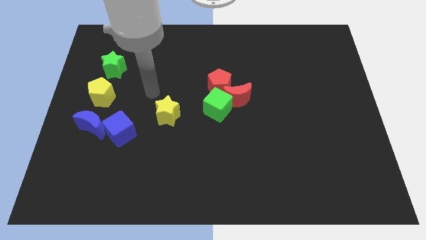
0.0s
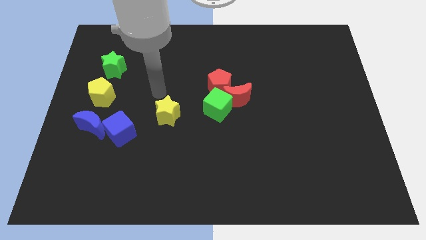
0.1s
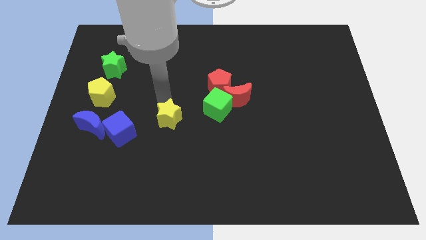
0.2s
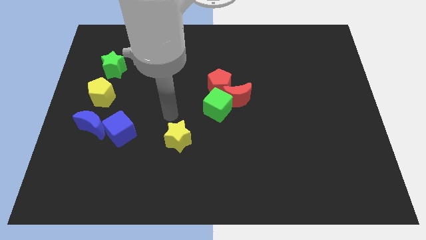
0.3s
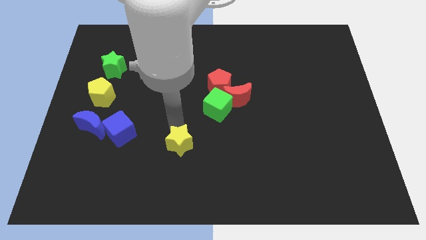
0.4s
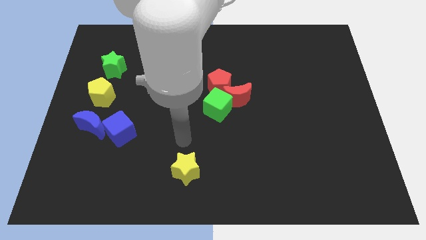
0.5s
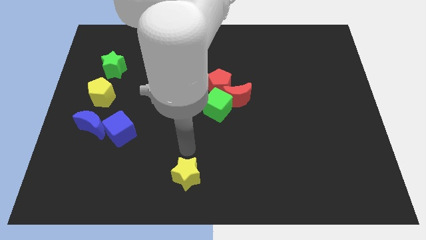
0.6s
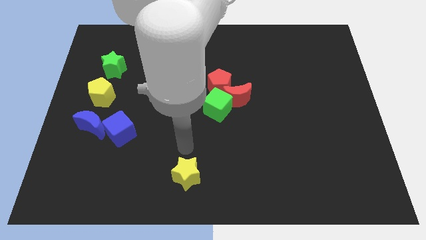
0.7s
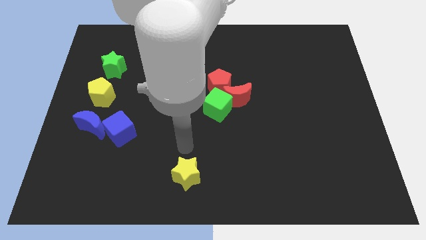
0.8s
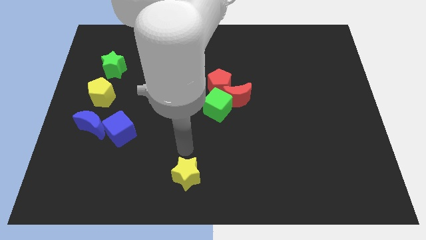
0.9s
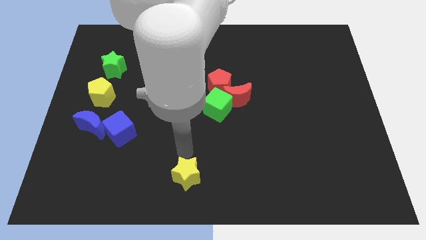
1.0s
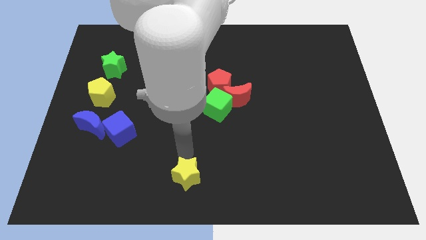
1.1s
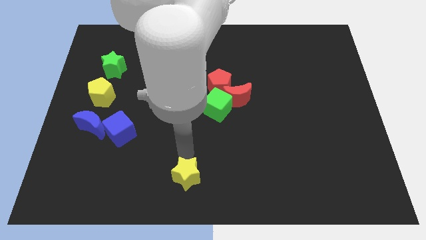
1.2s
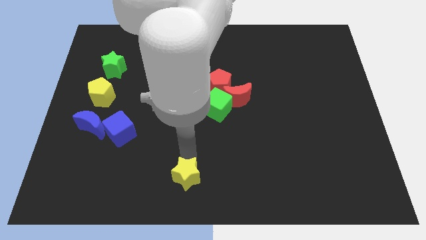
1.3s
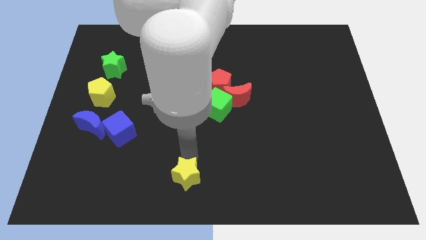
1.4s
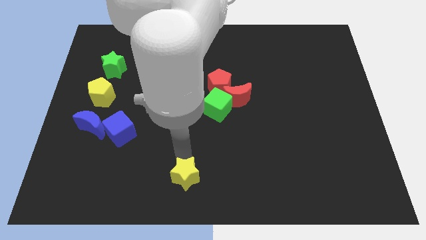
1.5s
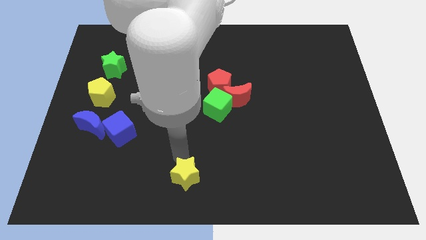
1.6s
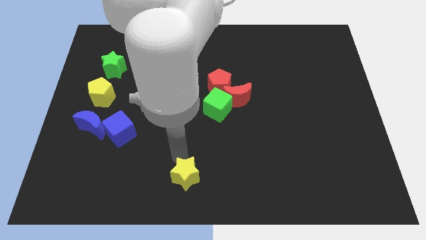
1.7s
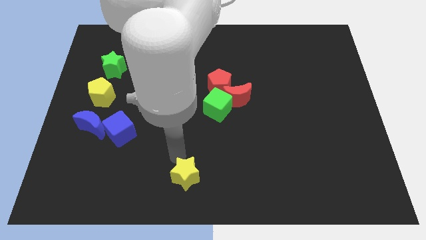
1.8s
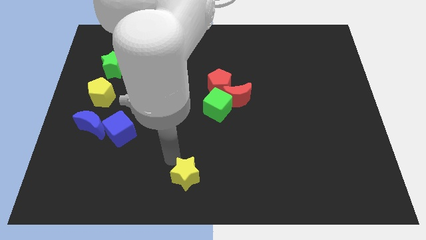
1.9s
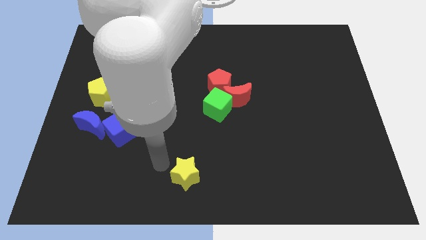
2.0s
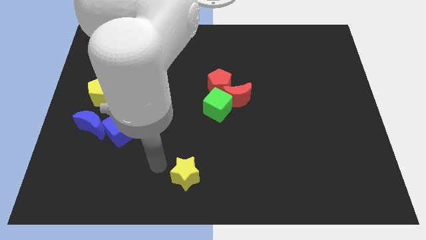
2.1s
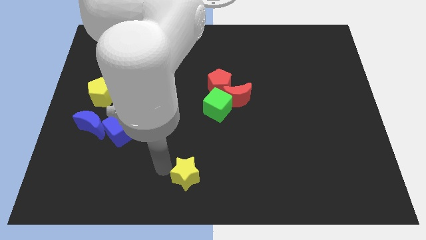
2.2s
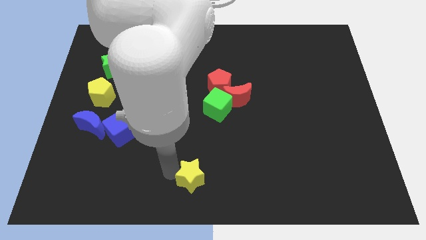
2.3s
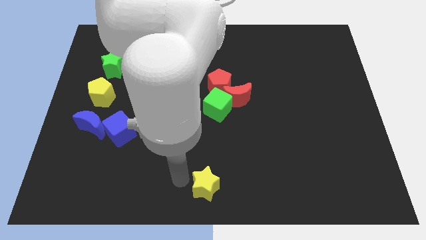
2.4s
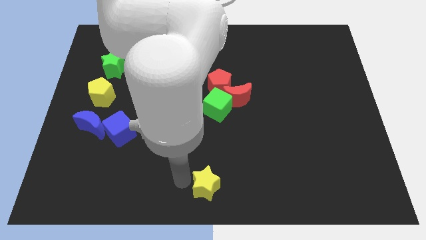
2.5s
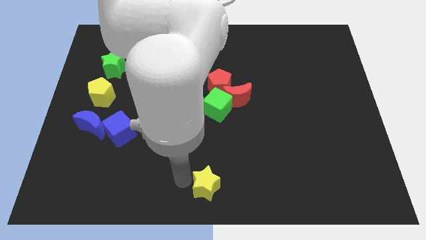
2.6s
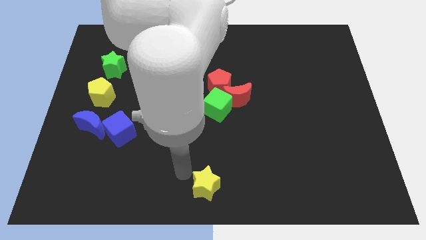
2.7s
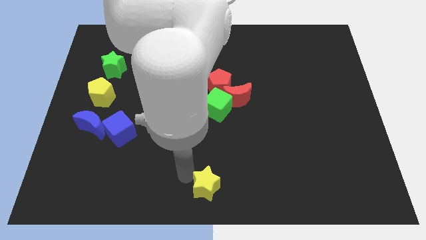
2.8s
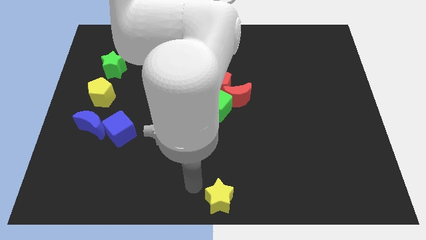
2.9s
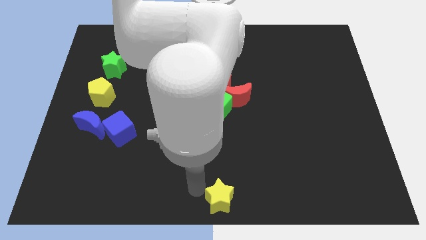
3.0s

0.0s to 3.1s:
move yellow star middle of the board

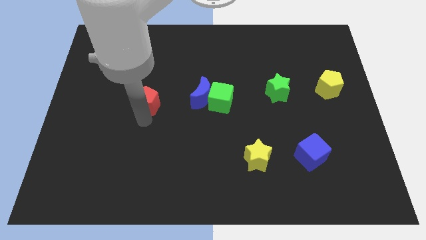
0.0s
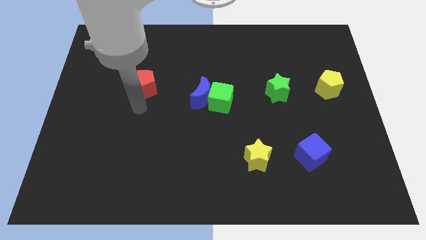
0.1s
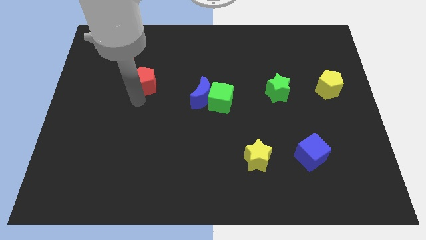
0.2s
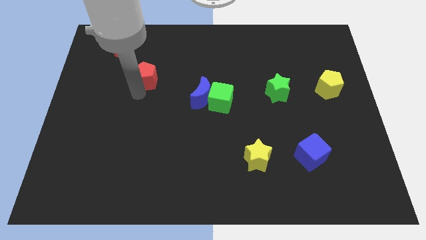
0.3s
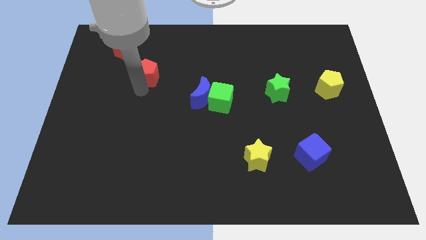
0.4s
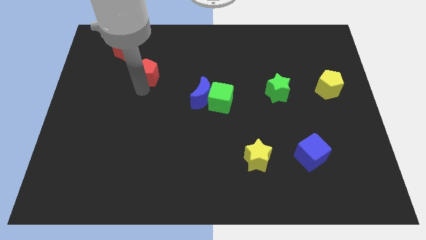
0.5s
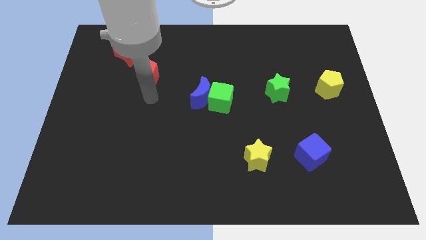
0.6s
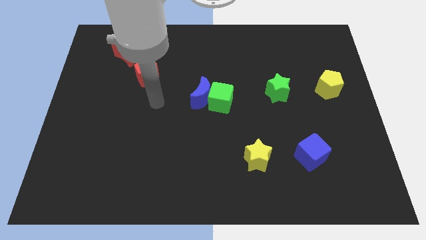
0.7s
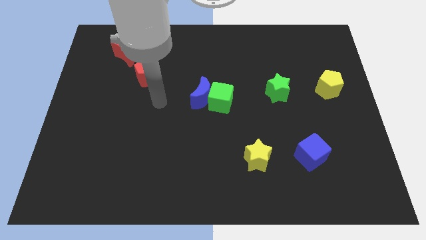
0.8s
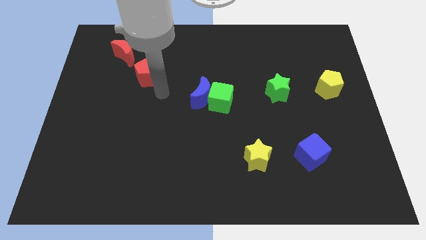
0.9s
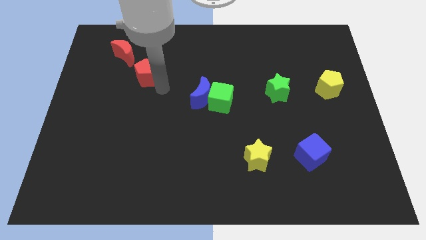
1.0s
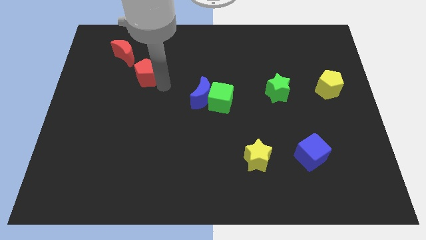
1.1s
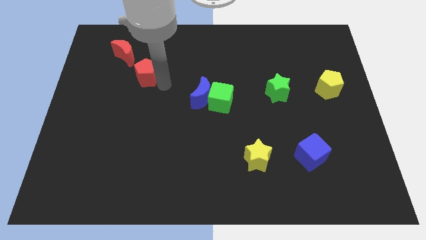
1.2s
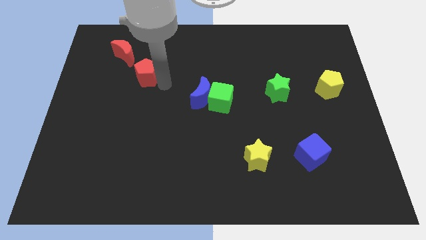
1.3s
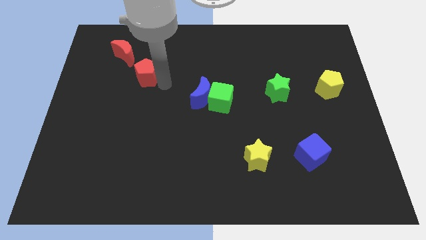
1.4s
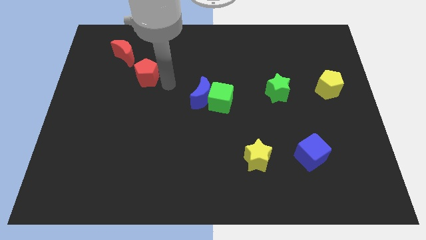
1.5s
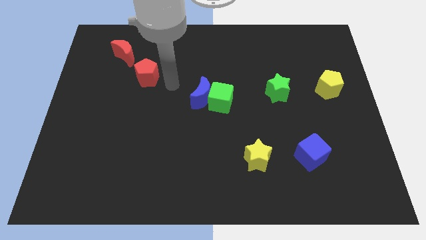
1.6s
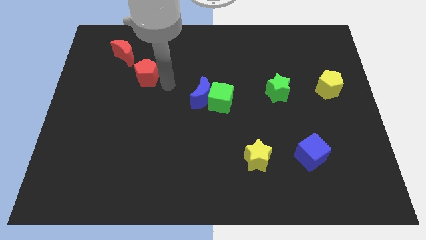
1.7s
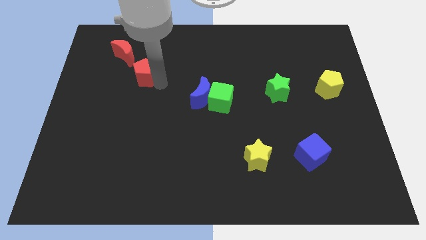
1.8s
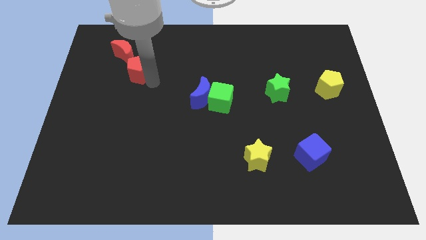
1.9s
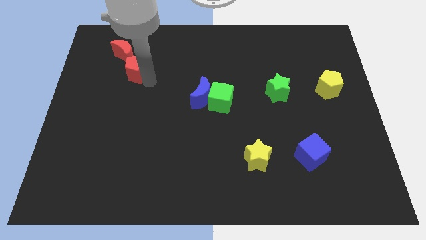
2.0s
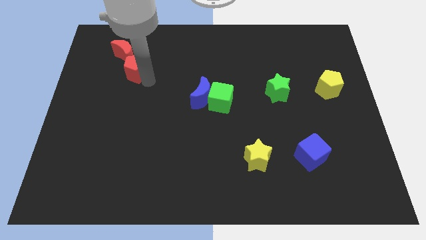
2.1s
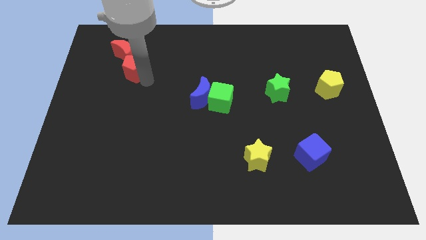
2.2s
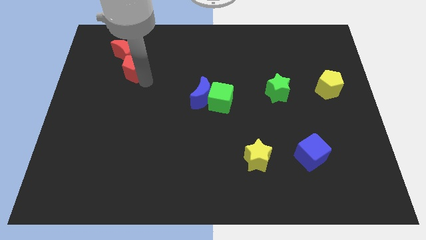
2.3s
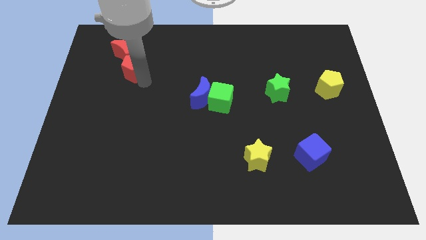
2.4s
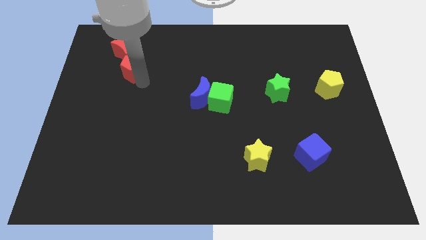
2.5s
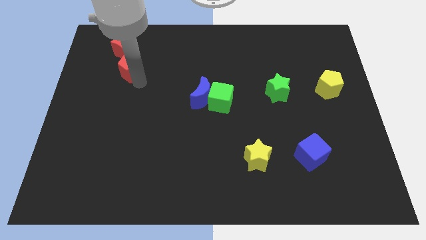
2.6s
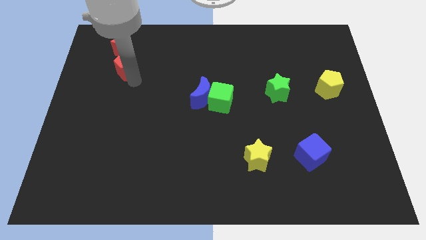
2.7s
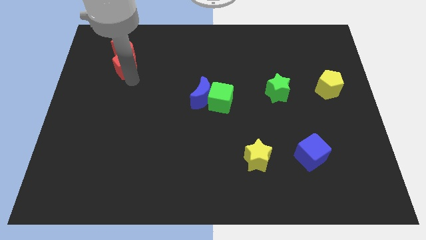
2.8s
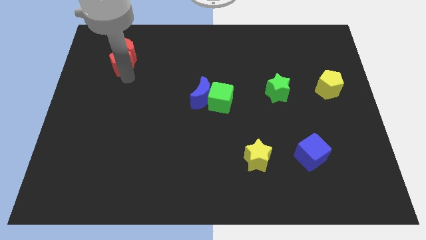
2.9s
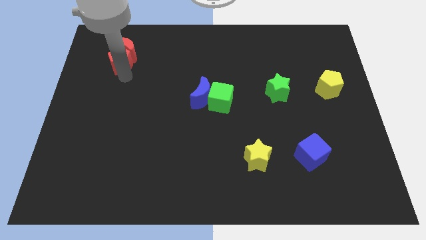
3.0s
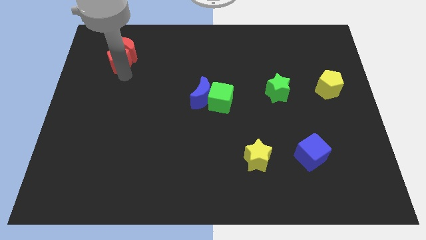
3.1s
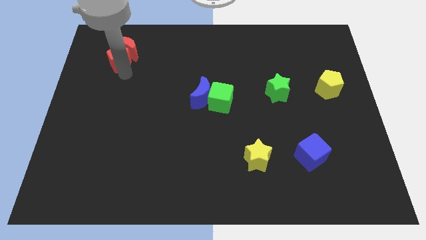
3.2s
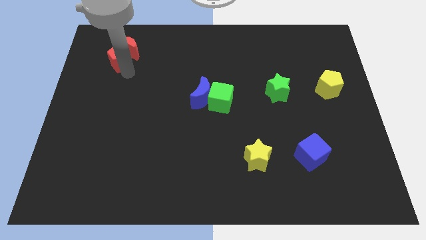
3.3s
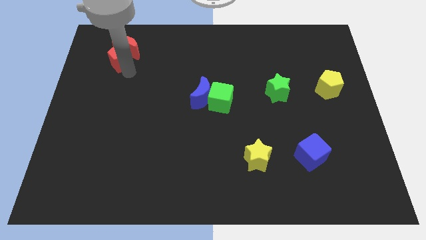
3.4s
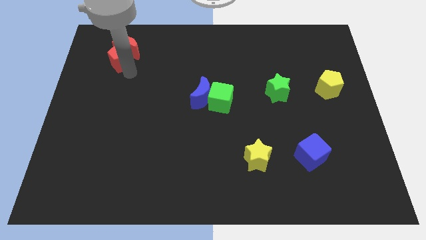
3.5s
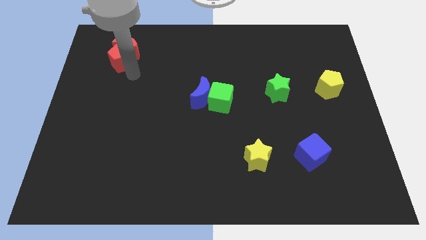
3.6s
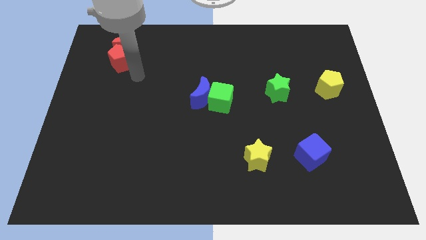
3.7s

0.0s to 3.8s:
push the red pentagon into the red moon

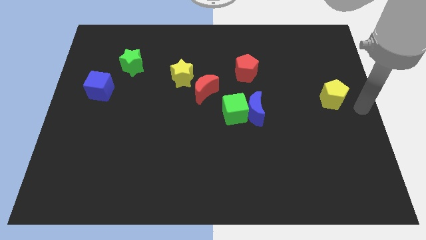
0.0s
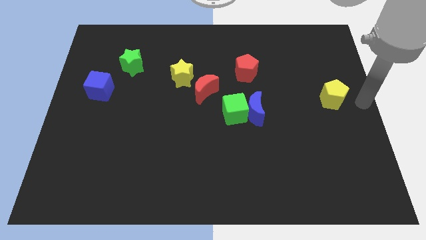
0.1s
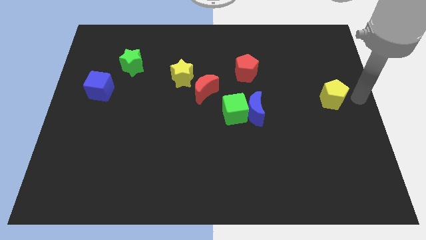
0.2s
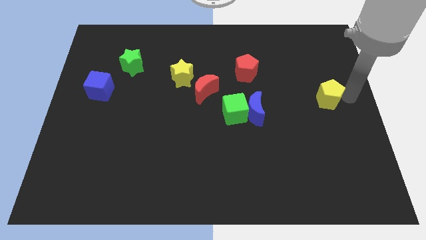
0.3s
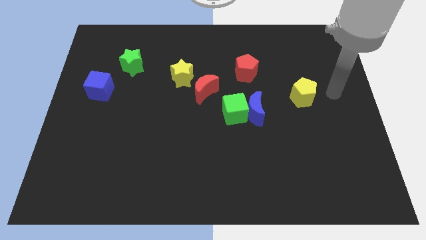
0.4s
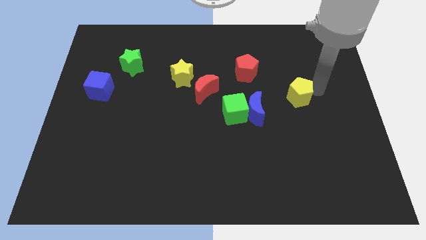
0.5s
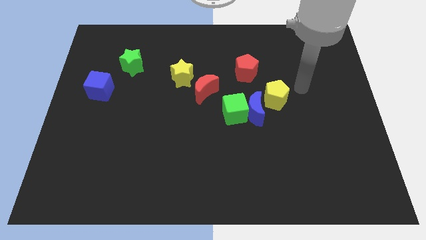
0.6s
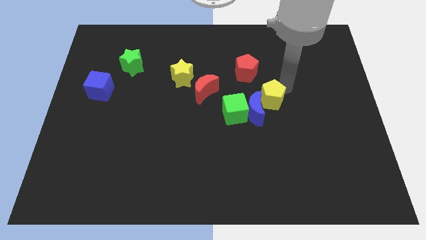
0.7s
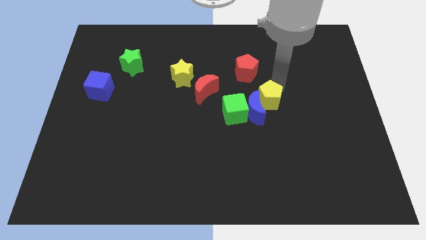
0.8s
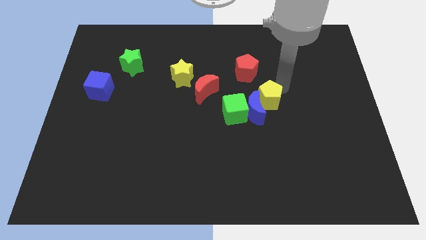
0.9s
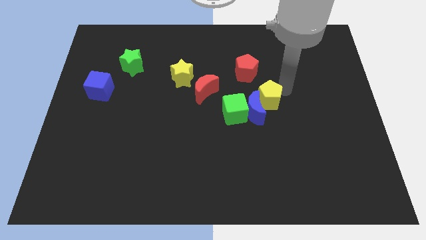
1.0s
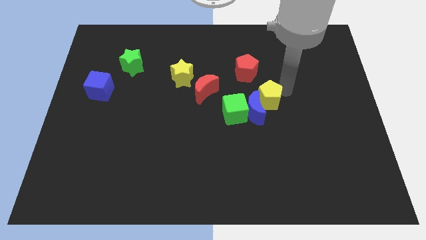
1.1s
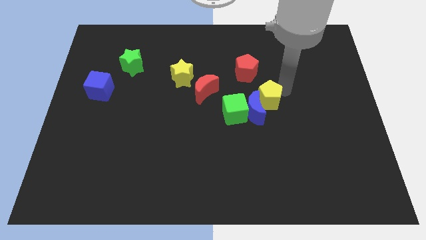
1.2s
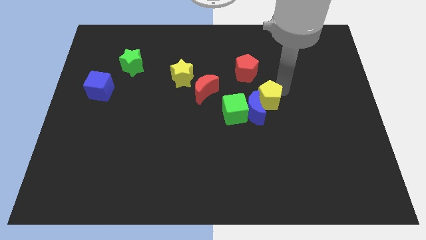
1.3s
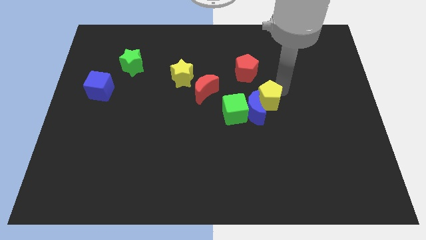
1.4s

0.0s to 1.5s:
move yellow pentagon close to blue moon

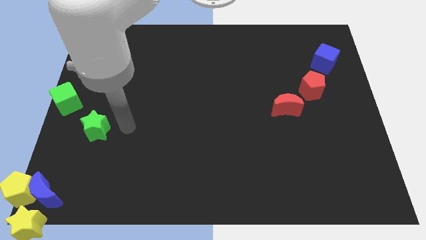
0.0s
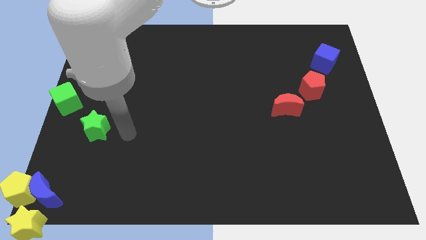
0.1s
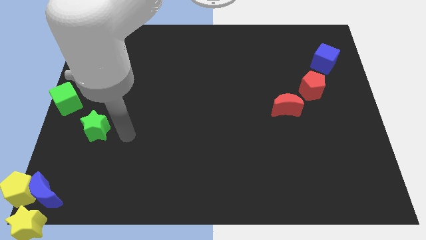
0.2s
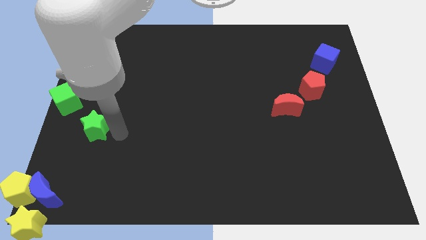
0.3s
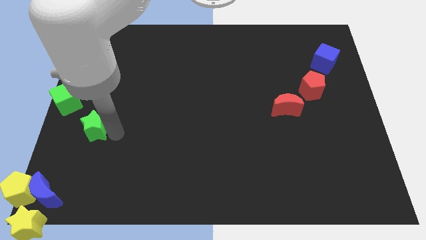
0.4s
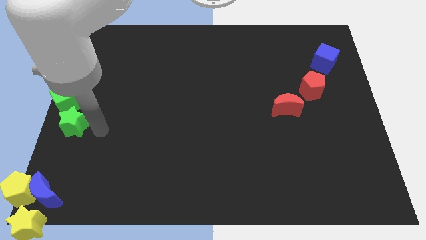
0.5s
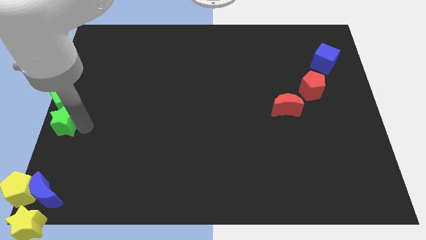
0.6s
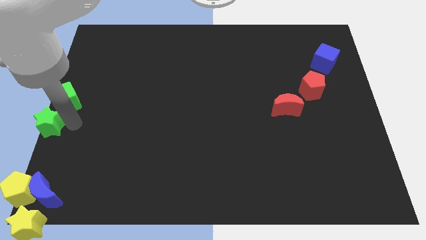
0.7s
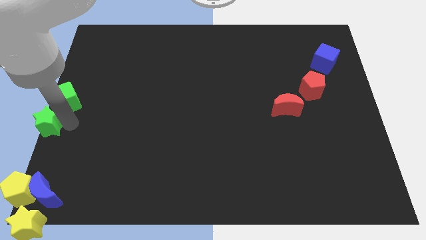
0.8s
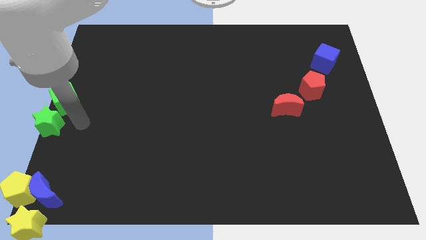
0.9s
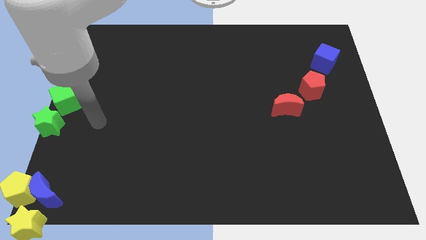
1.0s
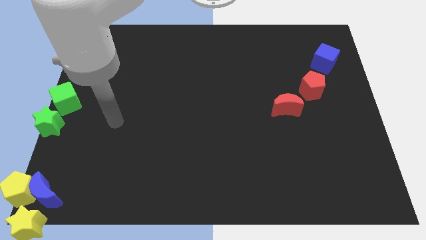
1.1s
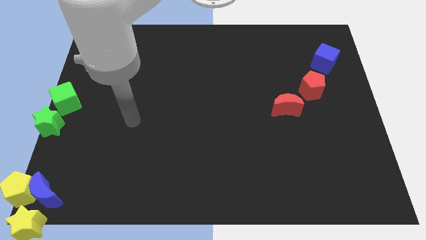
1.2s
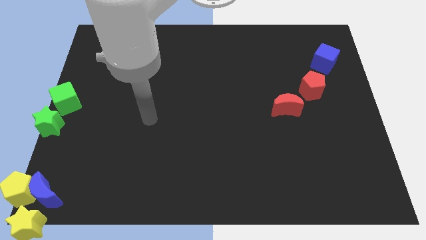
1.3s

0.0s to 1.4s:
place the green star towards the bottom right of the green cube
